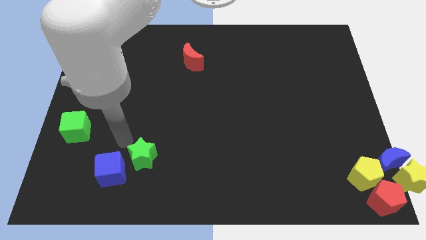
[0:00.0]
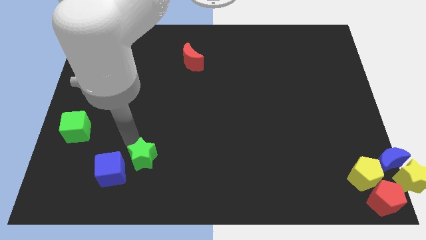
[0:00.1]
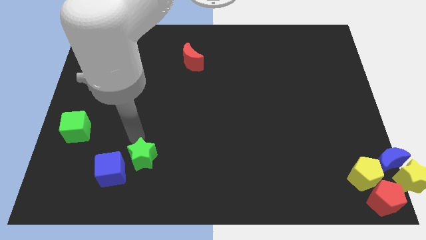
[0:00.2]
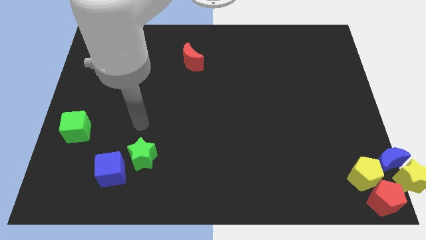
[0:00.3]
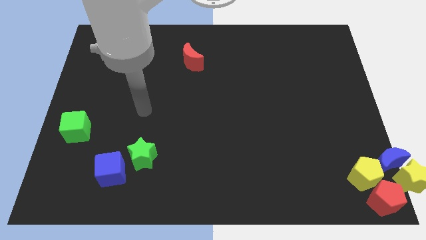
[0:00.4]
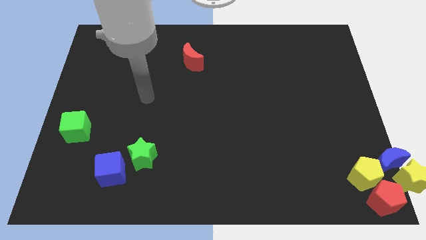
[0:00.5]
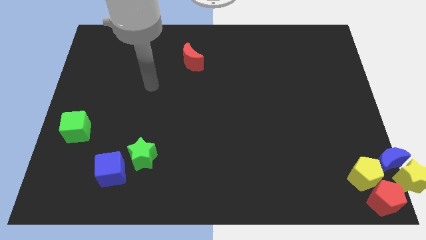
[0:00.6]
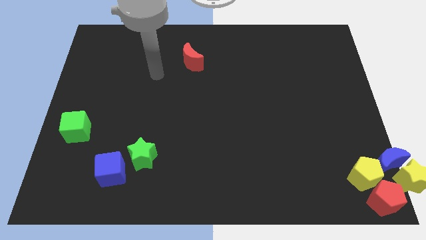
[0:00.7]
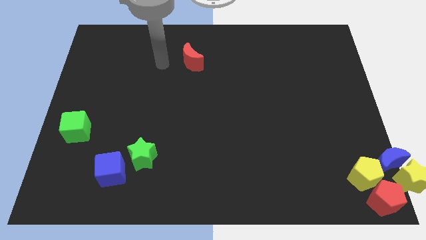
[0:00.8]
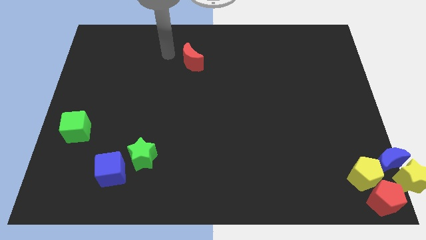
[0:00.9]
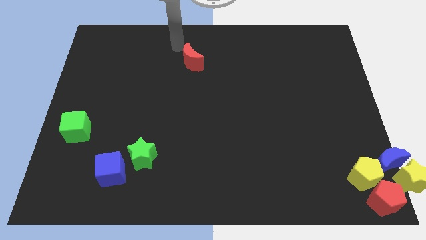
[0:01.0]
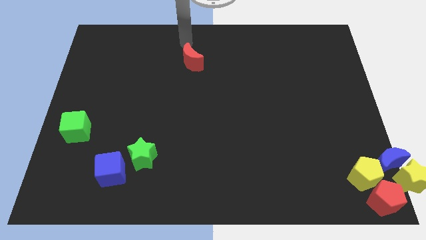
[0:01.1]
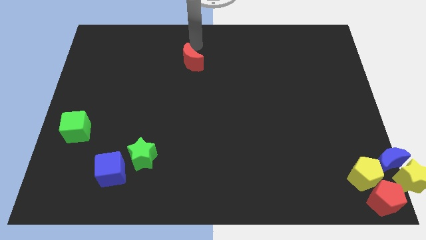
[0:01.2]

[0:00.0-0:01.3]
move your arm above the red crescent

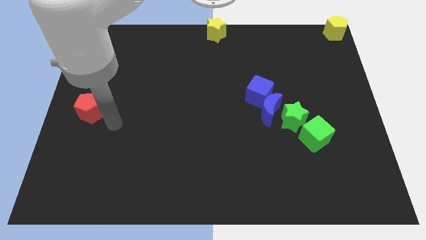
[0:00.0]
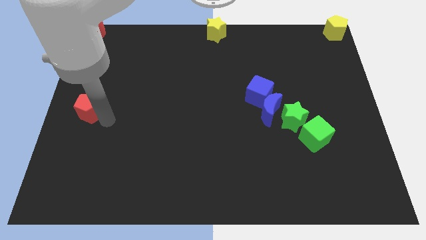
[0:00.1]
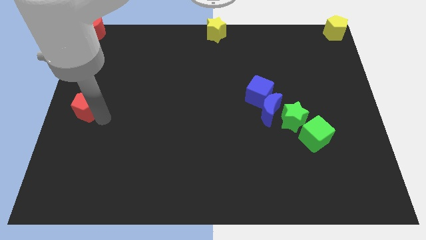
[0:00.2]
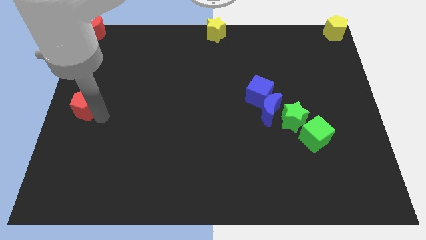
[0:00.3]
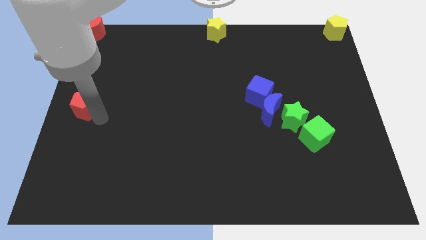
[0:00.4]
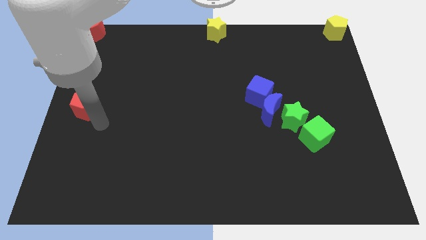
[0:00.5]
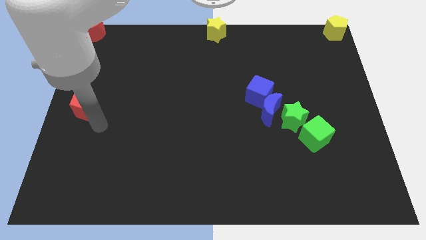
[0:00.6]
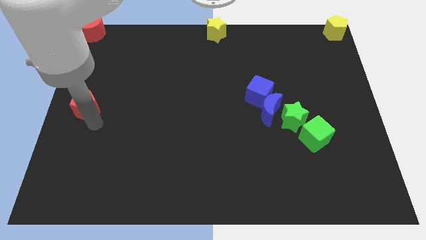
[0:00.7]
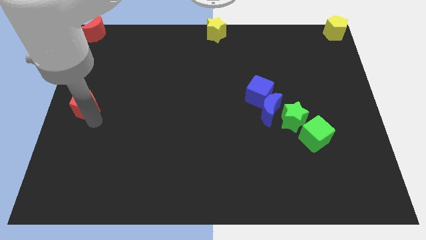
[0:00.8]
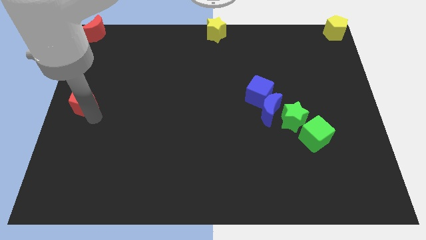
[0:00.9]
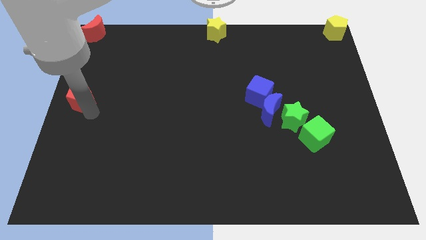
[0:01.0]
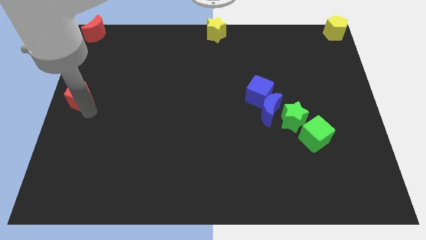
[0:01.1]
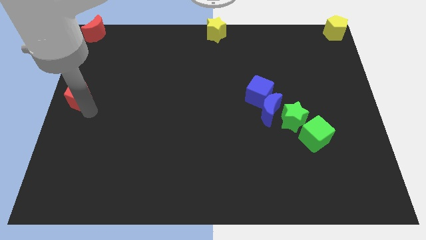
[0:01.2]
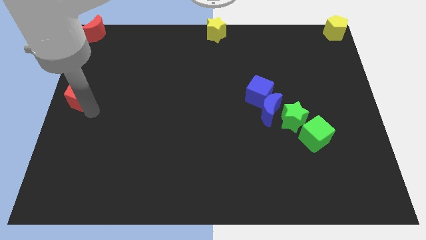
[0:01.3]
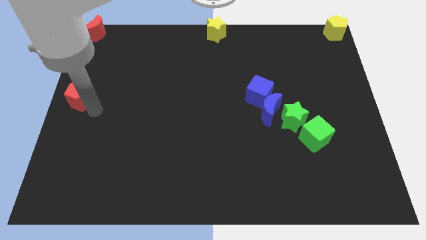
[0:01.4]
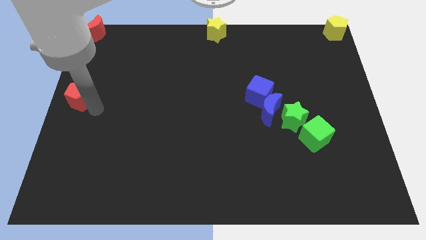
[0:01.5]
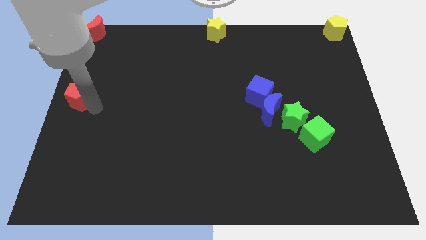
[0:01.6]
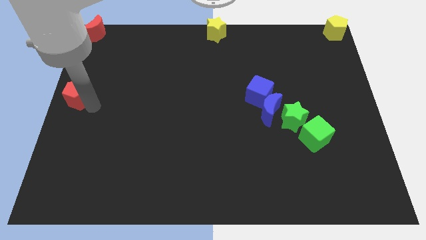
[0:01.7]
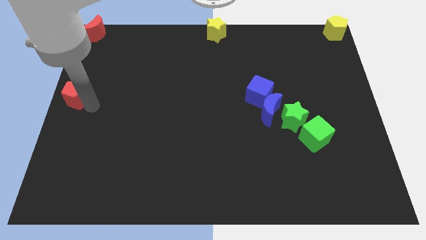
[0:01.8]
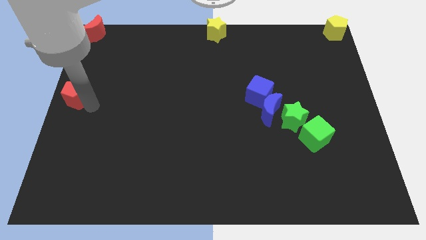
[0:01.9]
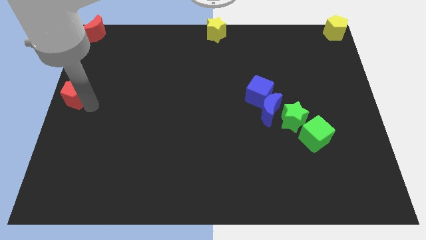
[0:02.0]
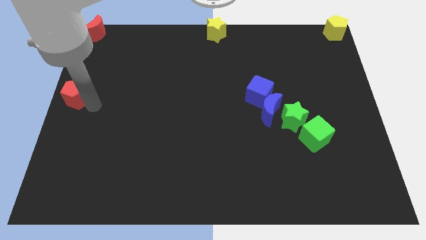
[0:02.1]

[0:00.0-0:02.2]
place the red pentagon to the left center of the board

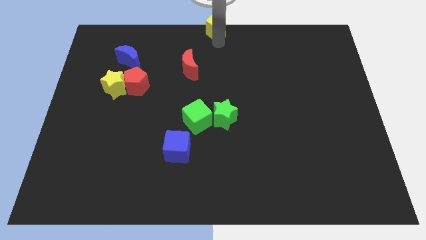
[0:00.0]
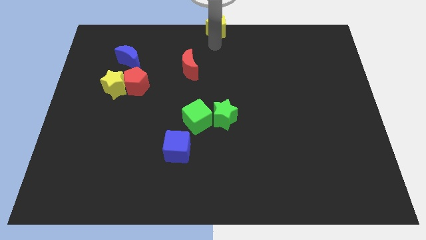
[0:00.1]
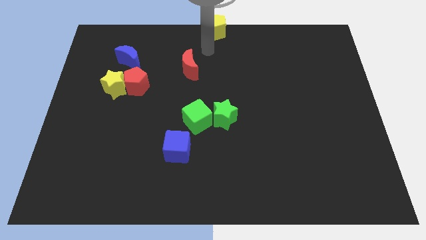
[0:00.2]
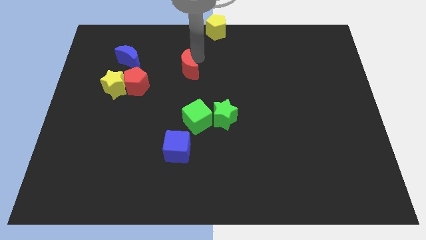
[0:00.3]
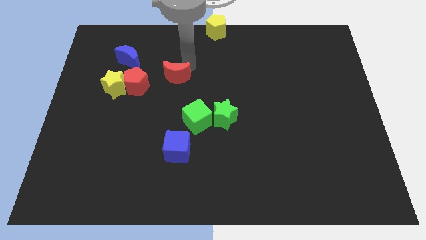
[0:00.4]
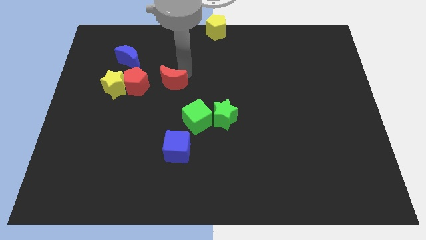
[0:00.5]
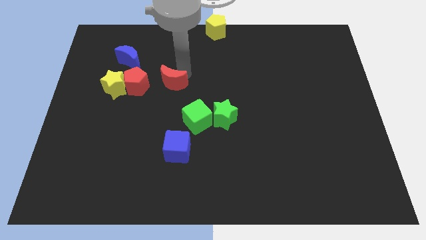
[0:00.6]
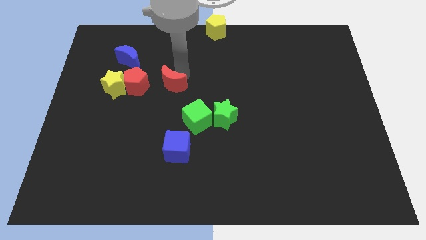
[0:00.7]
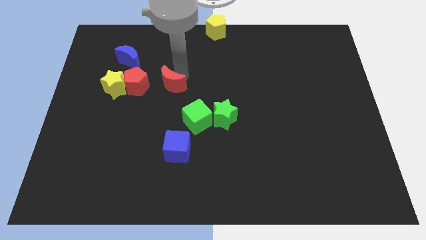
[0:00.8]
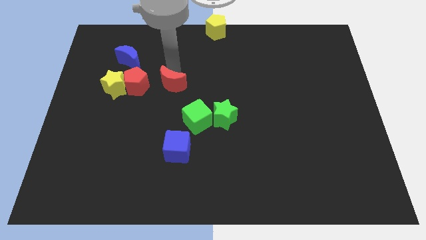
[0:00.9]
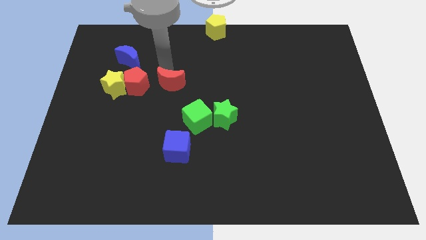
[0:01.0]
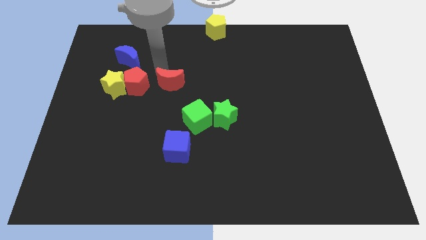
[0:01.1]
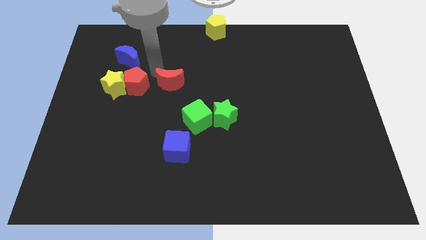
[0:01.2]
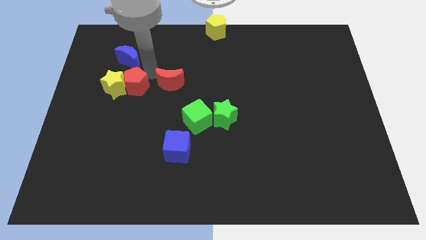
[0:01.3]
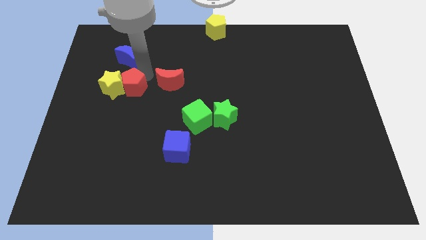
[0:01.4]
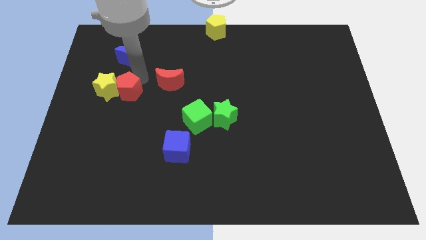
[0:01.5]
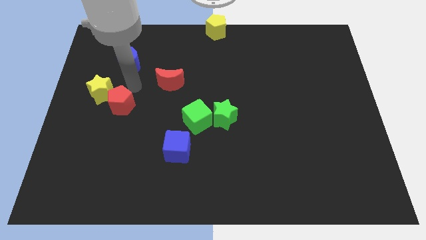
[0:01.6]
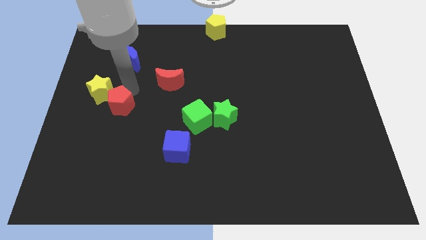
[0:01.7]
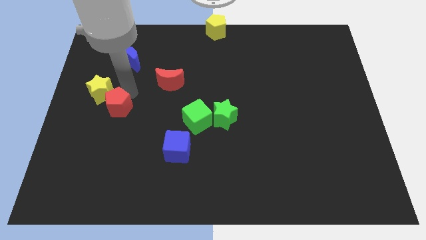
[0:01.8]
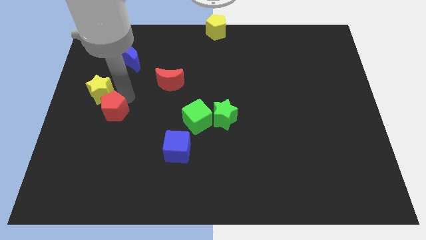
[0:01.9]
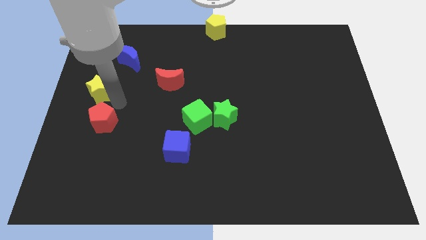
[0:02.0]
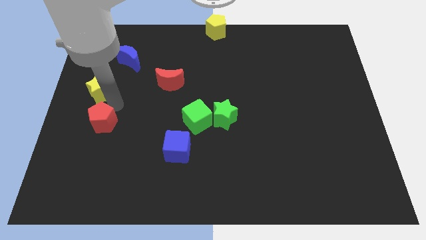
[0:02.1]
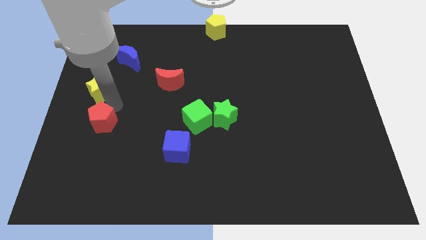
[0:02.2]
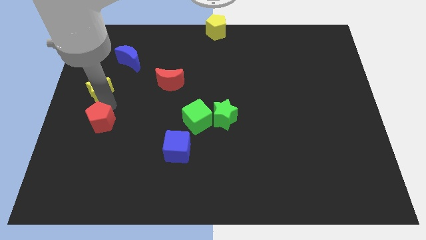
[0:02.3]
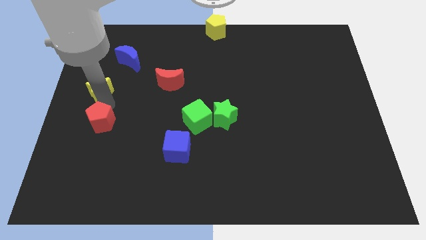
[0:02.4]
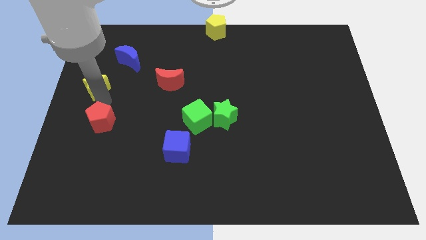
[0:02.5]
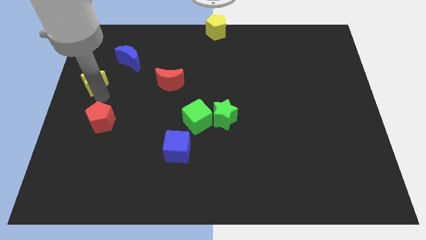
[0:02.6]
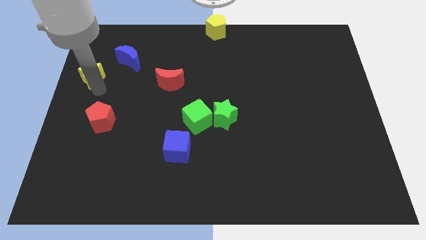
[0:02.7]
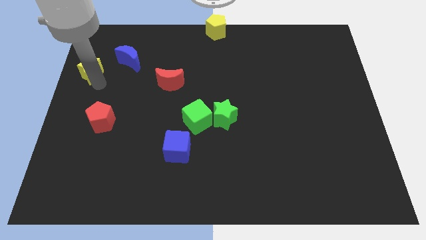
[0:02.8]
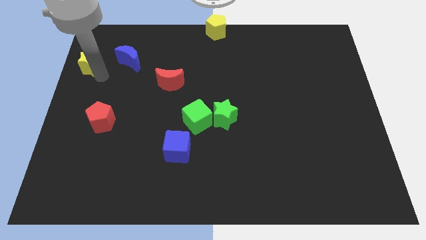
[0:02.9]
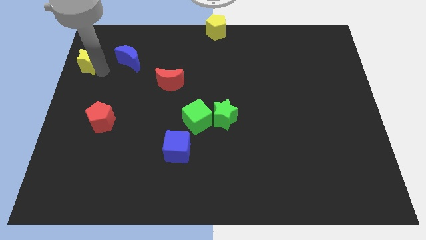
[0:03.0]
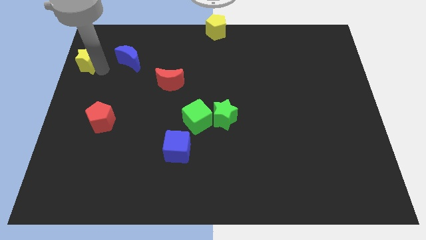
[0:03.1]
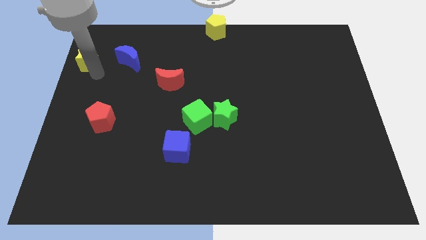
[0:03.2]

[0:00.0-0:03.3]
make a triangle of blocks out of red crescent red pentagon and yellow star

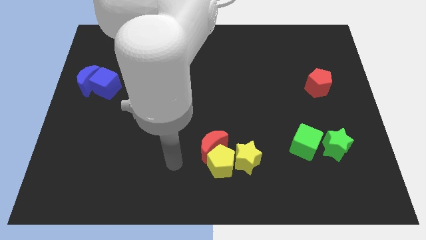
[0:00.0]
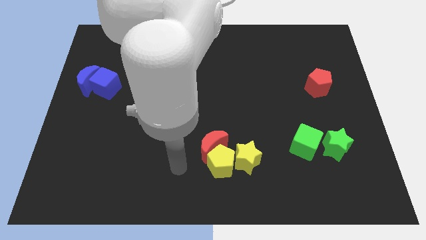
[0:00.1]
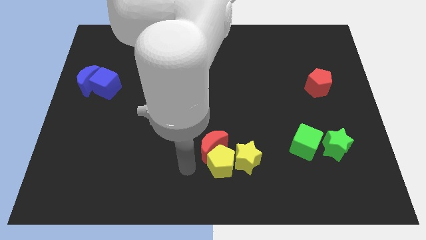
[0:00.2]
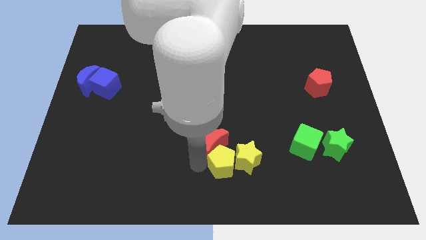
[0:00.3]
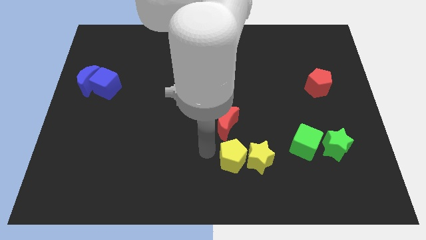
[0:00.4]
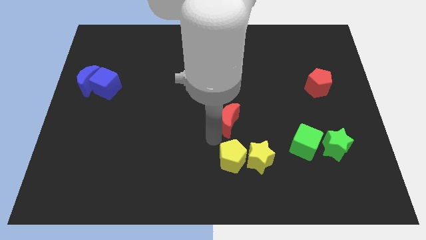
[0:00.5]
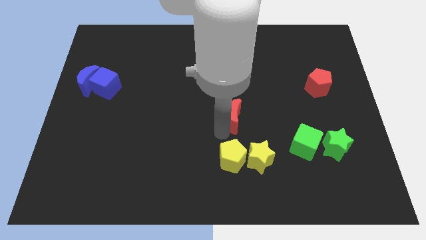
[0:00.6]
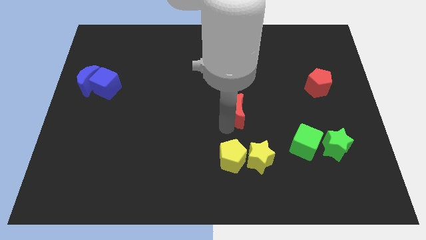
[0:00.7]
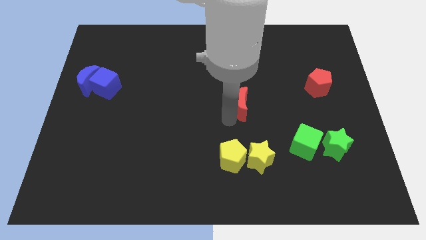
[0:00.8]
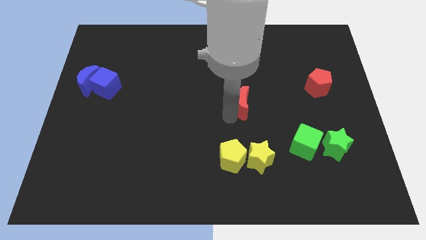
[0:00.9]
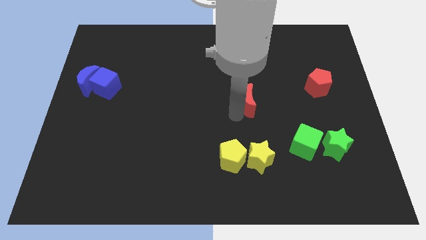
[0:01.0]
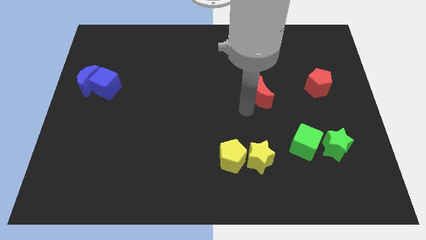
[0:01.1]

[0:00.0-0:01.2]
separate the red moon from yellow pentagon

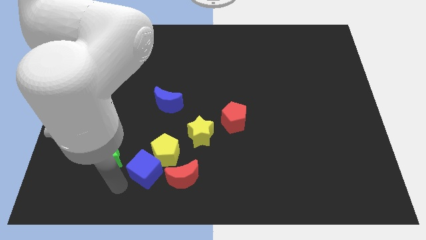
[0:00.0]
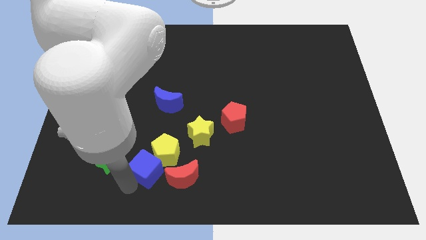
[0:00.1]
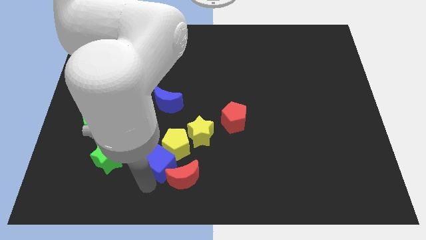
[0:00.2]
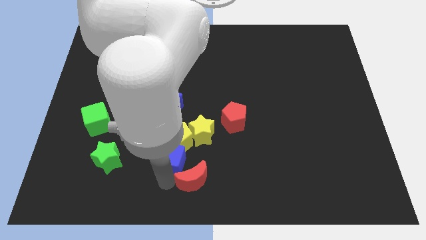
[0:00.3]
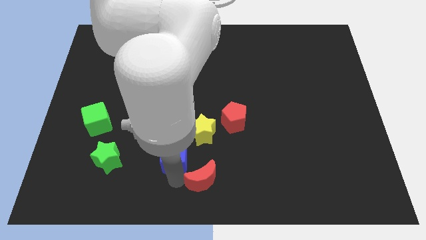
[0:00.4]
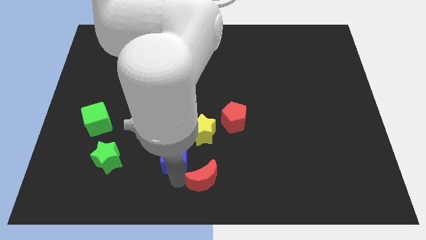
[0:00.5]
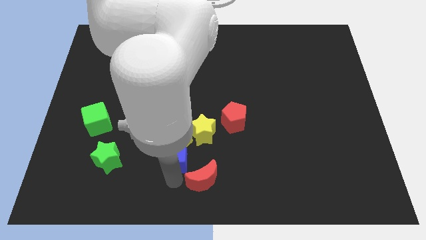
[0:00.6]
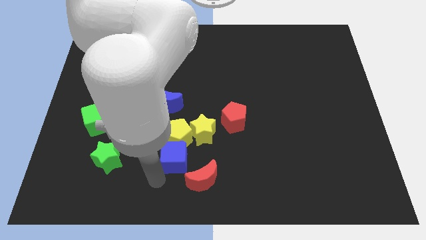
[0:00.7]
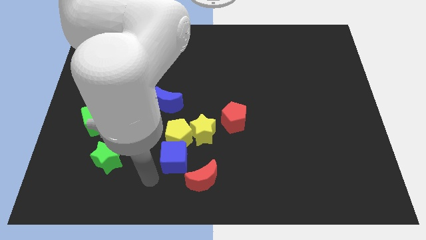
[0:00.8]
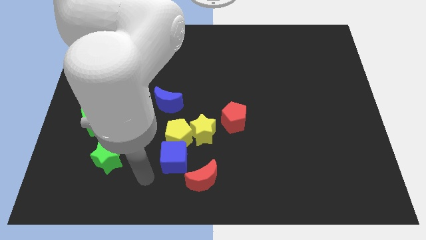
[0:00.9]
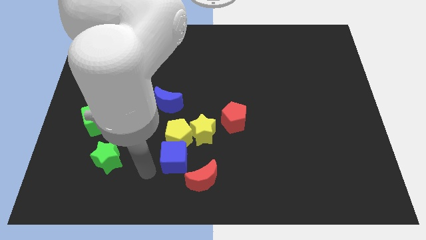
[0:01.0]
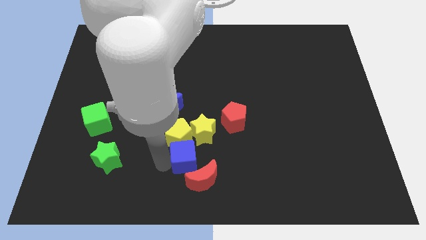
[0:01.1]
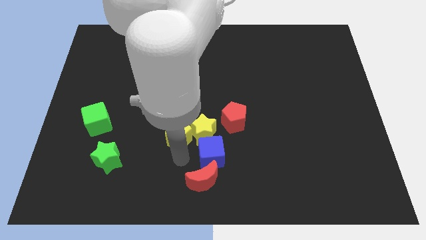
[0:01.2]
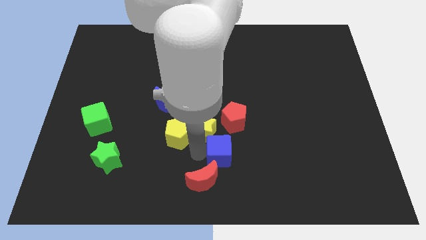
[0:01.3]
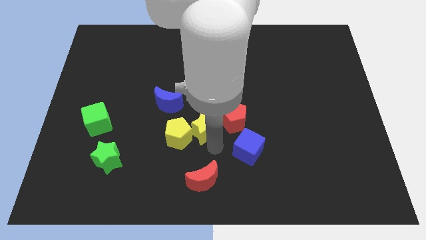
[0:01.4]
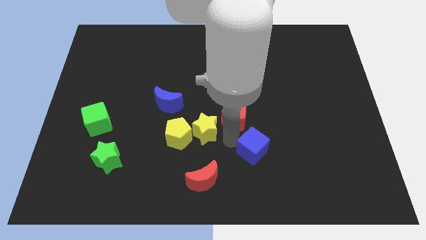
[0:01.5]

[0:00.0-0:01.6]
separate blue cube and the yellow pentagon
